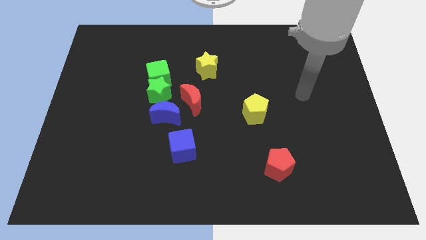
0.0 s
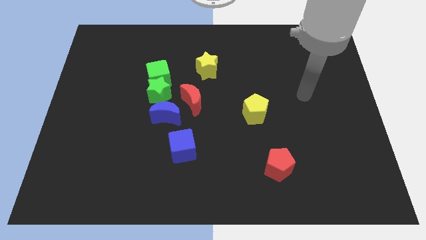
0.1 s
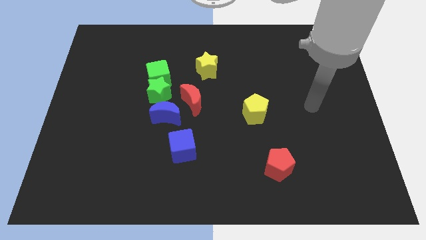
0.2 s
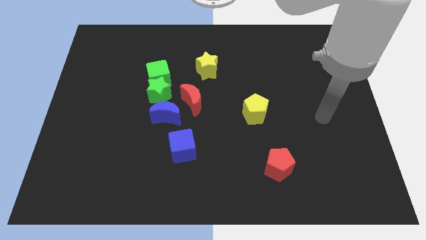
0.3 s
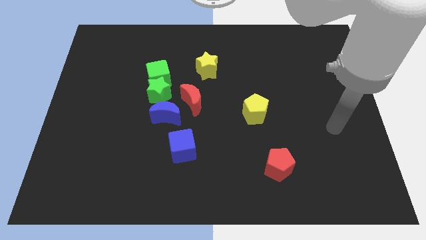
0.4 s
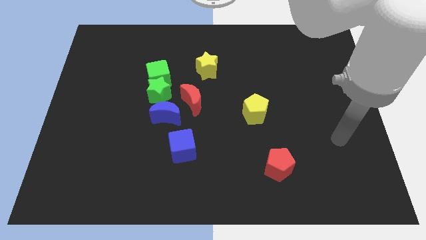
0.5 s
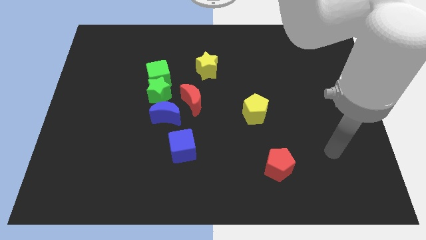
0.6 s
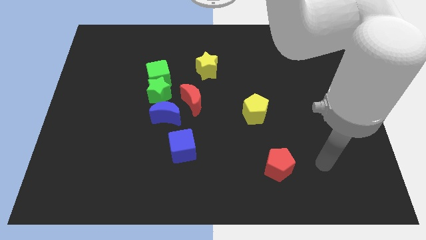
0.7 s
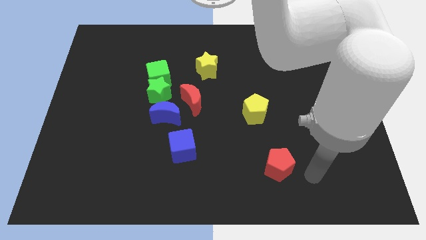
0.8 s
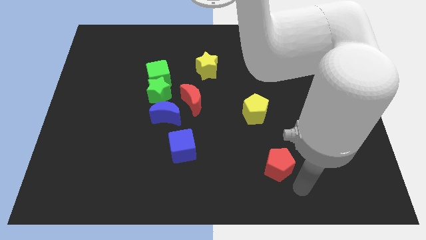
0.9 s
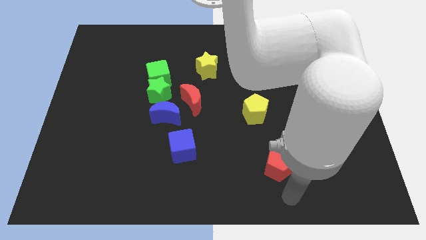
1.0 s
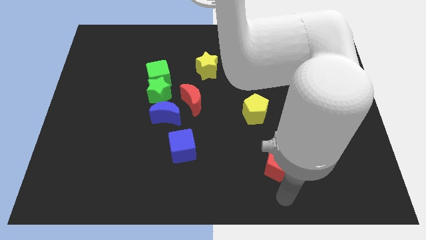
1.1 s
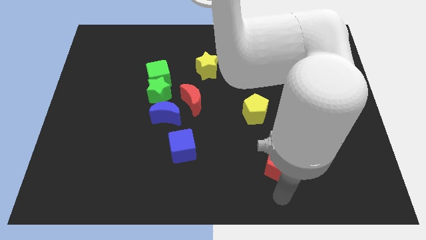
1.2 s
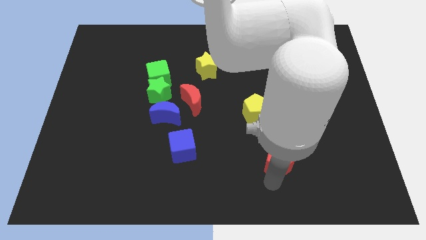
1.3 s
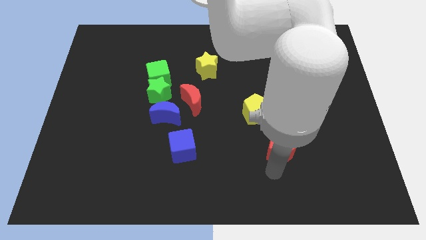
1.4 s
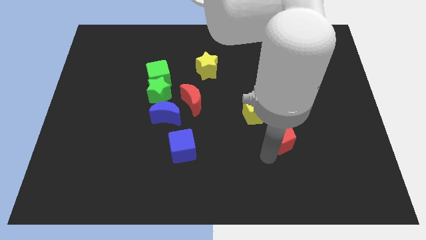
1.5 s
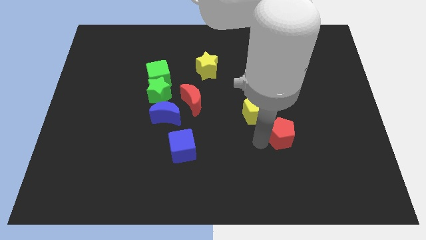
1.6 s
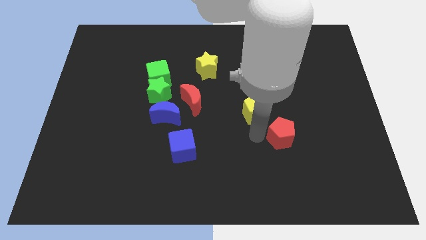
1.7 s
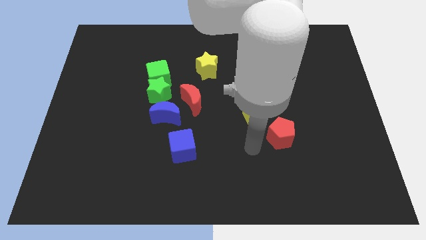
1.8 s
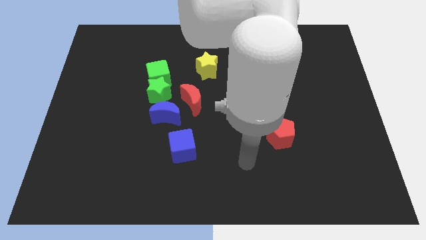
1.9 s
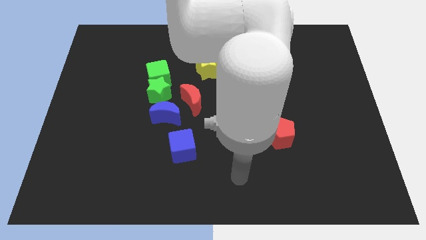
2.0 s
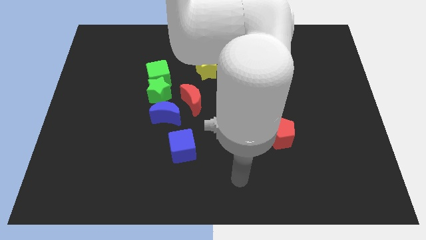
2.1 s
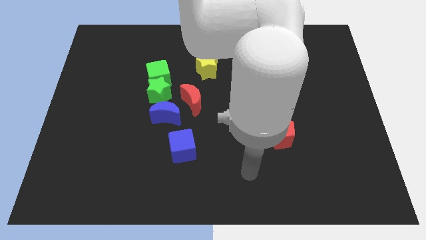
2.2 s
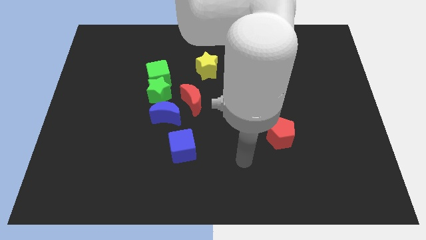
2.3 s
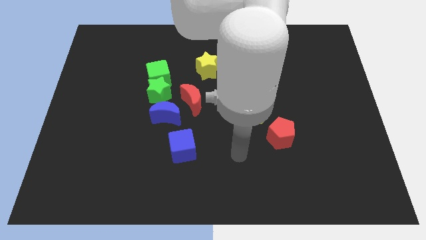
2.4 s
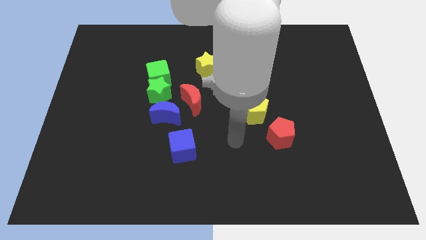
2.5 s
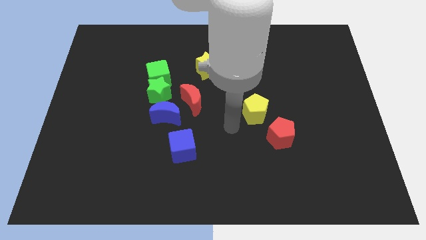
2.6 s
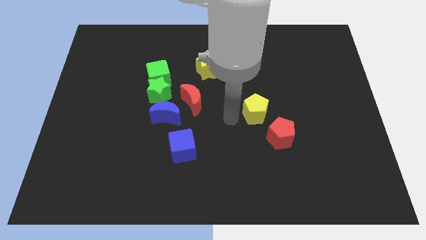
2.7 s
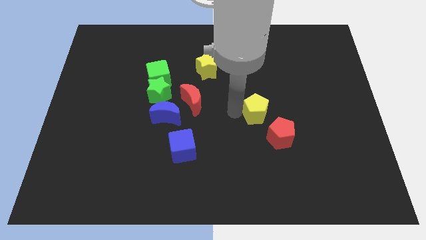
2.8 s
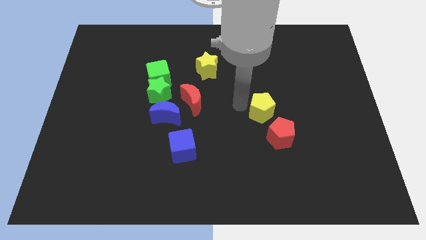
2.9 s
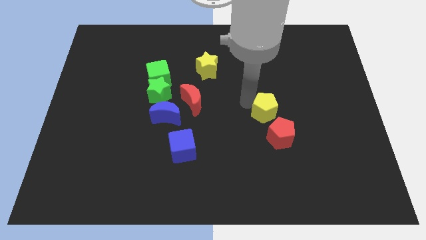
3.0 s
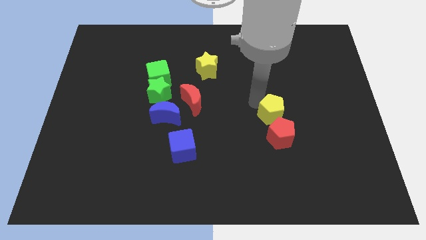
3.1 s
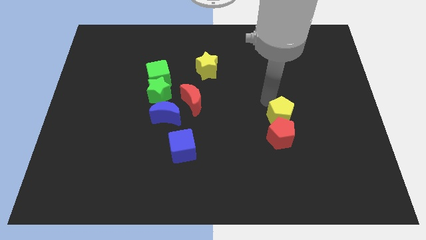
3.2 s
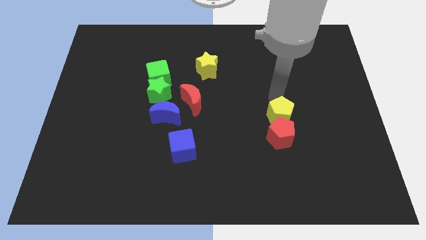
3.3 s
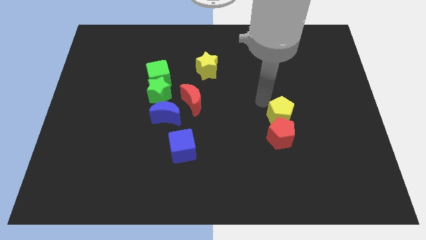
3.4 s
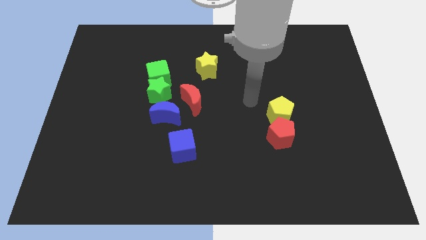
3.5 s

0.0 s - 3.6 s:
move the red pentagon and yellow pentagon to form a vertical line

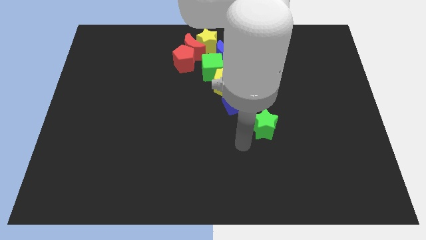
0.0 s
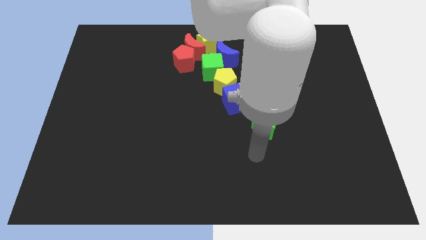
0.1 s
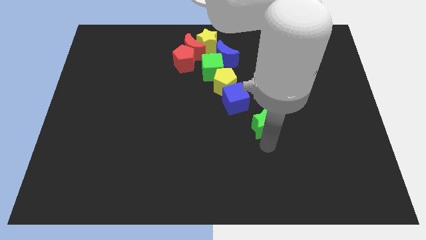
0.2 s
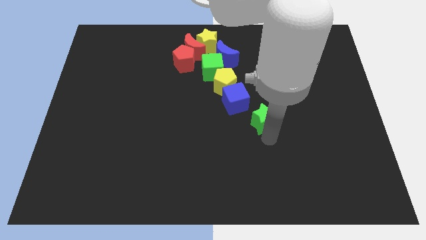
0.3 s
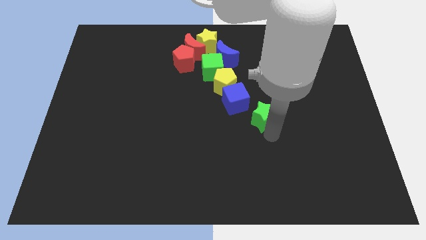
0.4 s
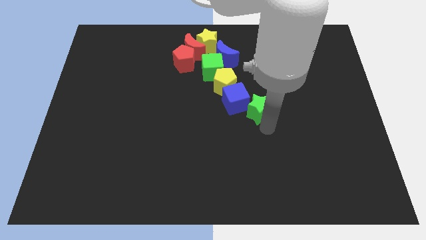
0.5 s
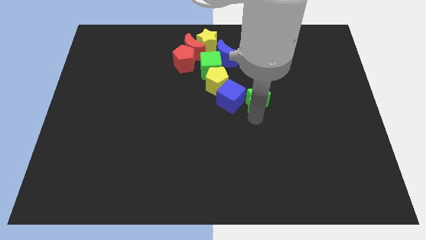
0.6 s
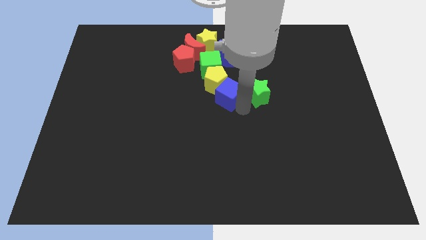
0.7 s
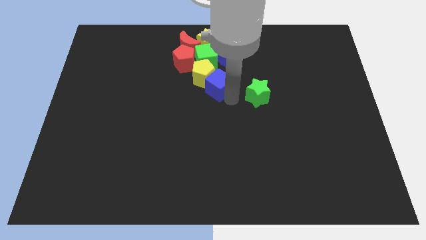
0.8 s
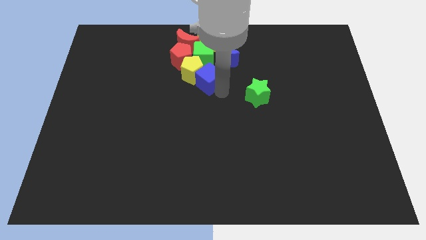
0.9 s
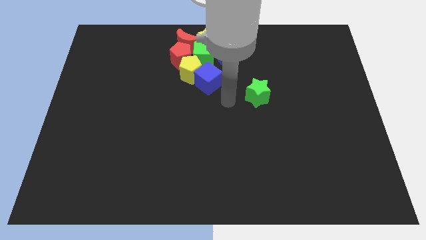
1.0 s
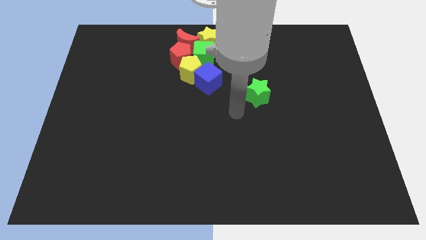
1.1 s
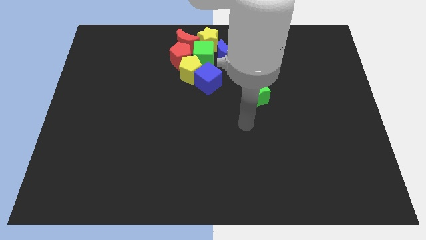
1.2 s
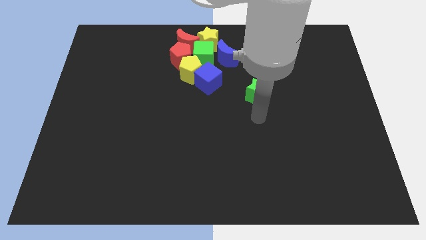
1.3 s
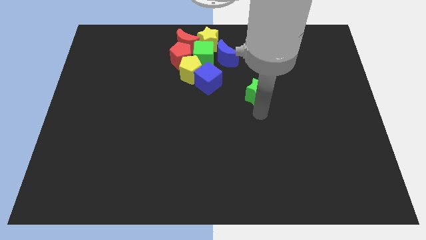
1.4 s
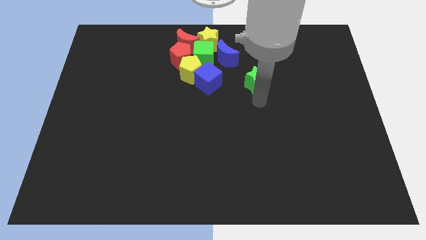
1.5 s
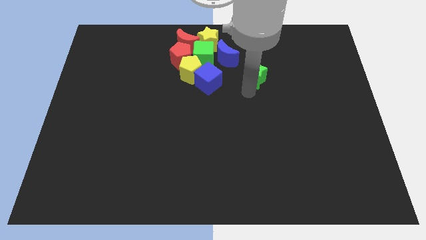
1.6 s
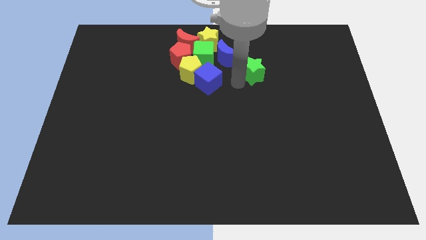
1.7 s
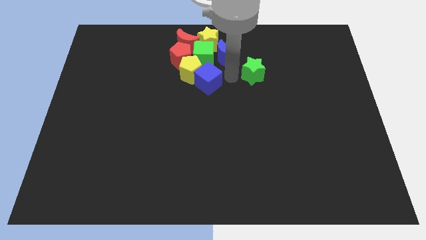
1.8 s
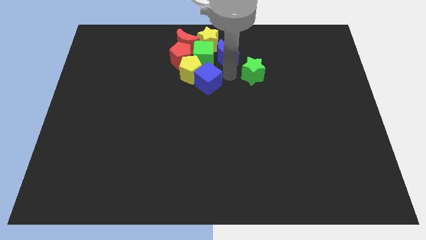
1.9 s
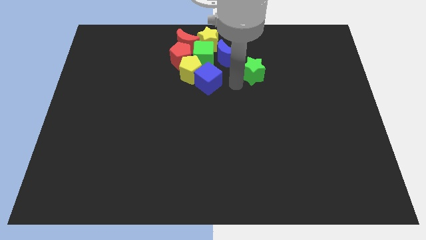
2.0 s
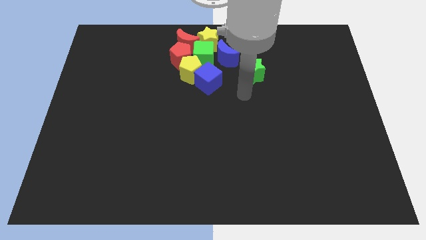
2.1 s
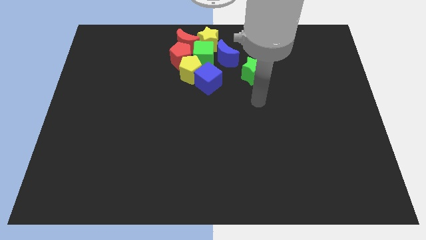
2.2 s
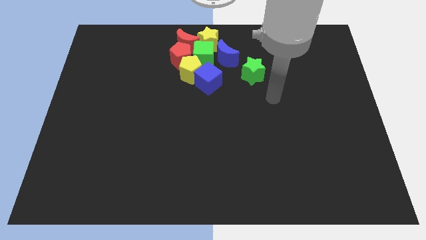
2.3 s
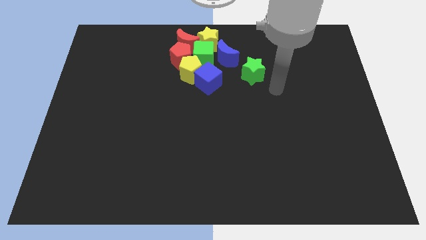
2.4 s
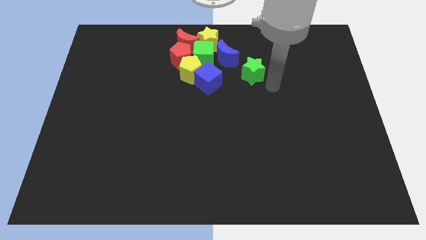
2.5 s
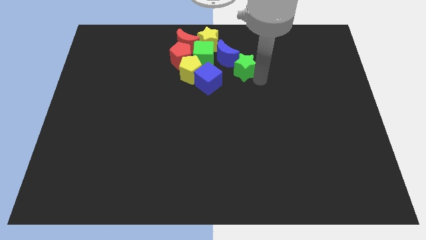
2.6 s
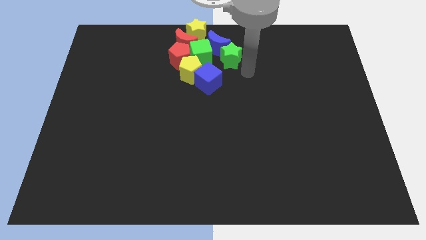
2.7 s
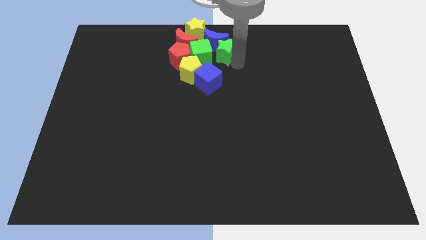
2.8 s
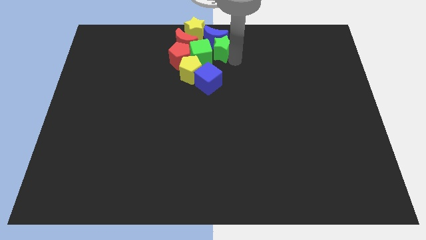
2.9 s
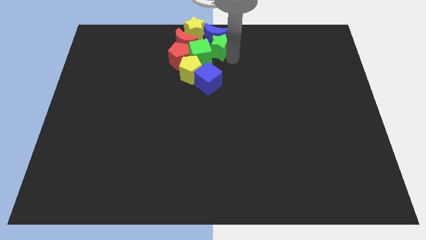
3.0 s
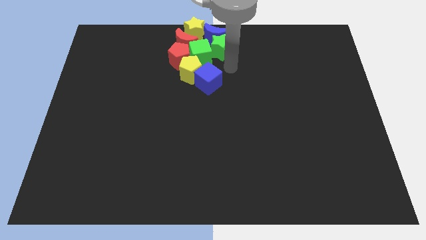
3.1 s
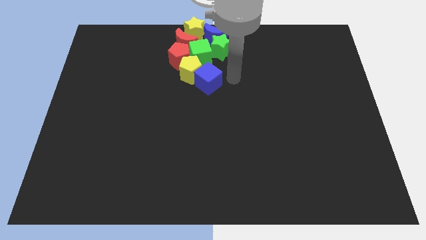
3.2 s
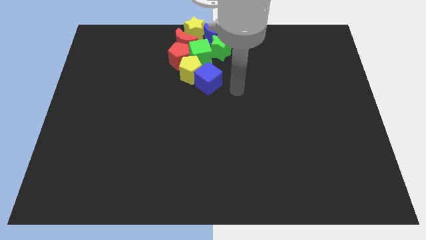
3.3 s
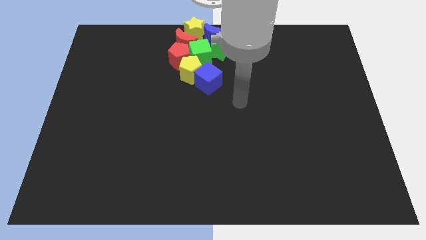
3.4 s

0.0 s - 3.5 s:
push the green star into the green cube

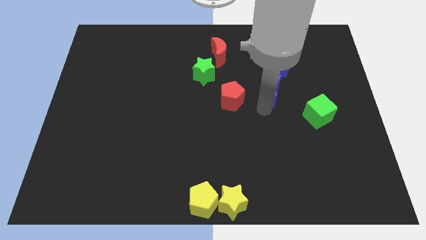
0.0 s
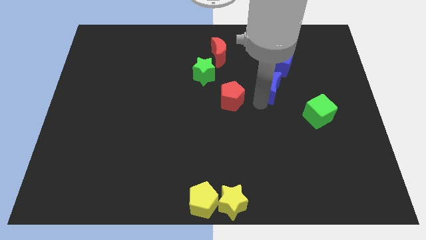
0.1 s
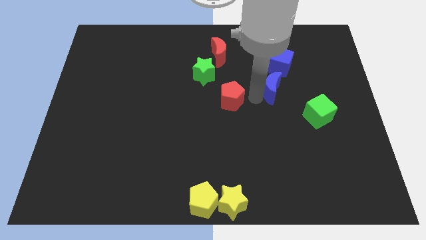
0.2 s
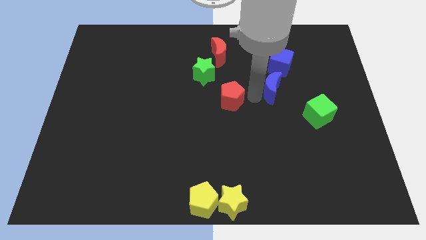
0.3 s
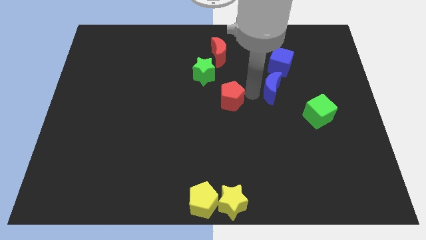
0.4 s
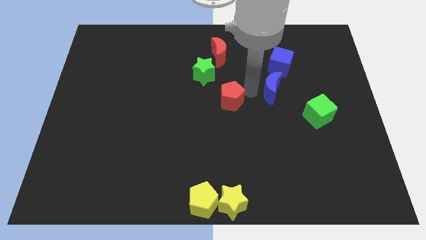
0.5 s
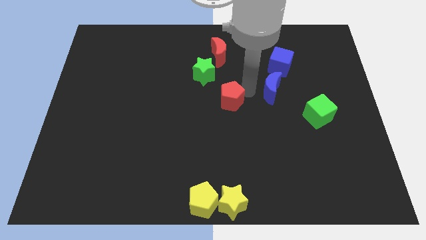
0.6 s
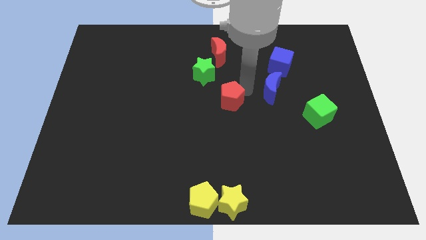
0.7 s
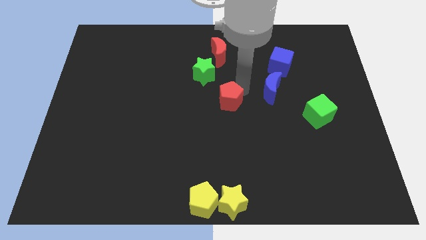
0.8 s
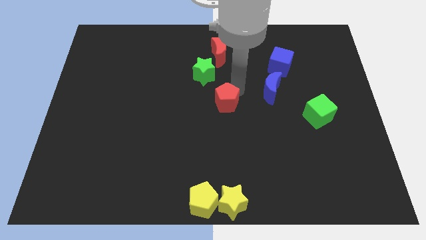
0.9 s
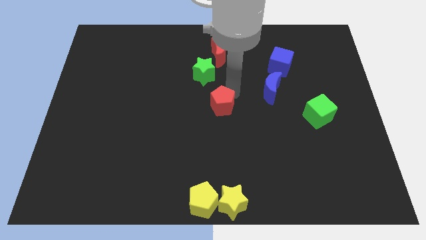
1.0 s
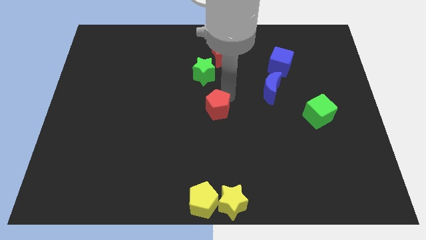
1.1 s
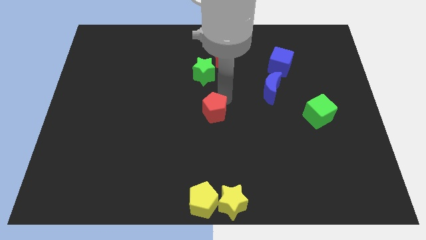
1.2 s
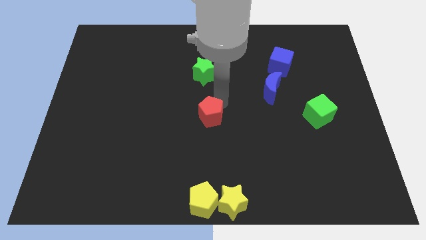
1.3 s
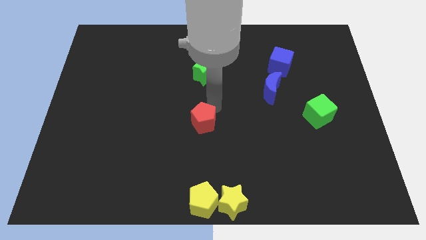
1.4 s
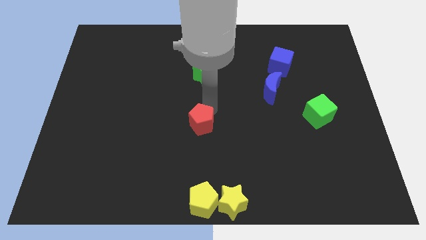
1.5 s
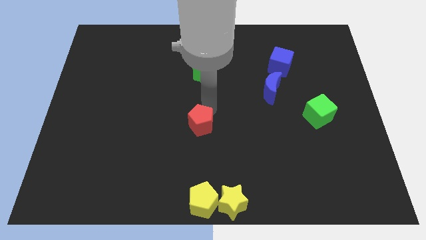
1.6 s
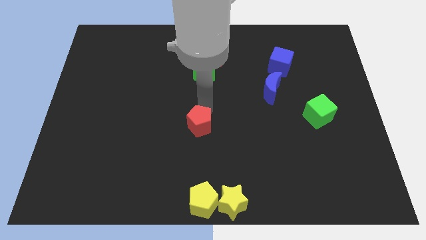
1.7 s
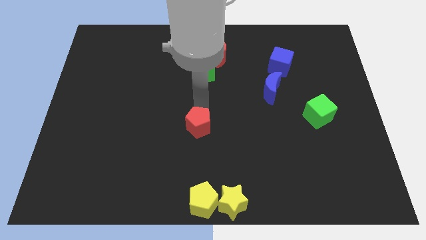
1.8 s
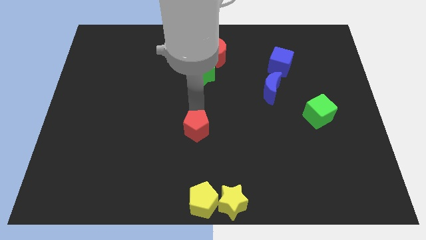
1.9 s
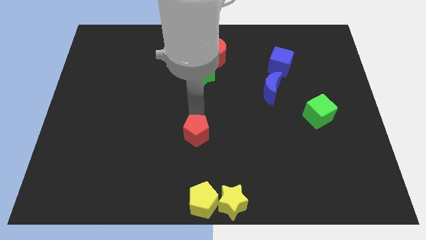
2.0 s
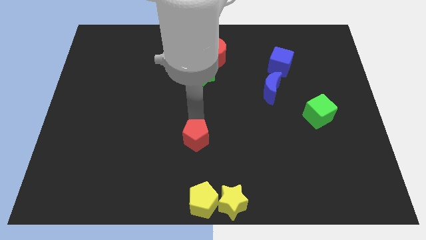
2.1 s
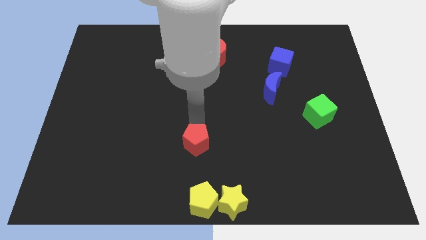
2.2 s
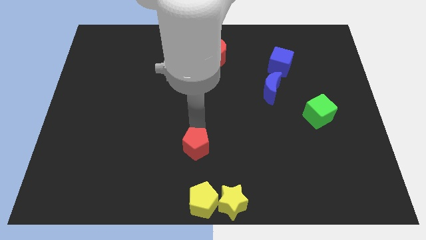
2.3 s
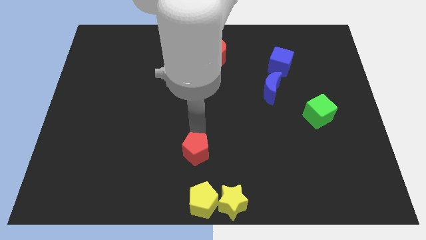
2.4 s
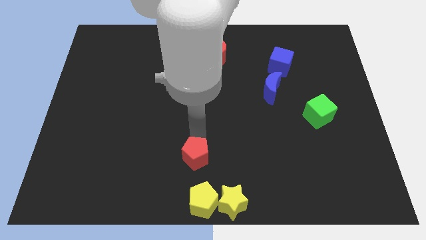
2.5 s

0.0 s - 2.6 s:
push the red pentagon to the top left of the yellow star
